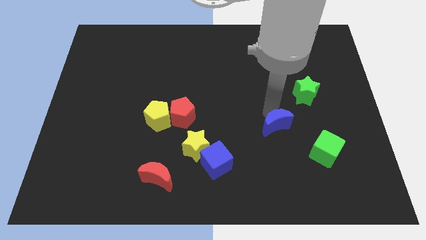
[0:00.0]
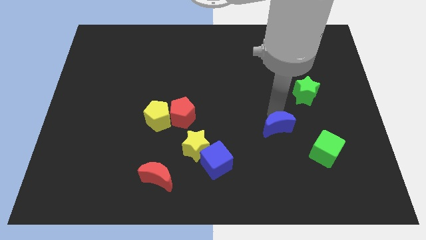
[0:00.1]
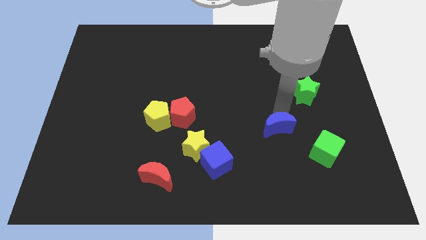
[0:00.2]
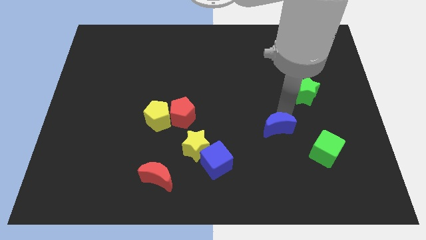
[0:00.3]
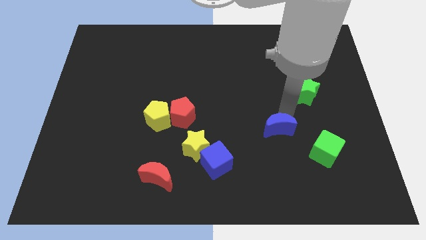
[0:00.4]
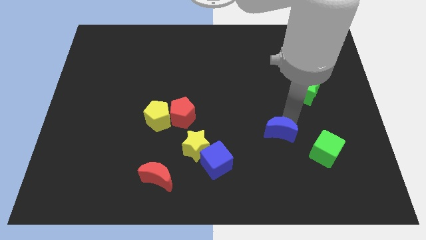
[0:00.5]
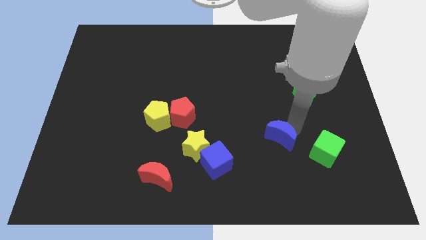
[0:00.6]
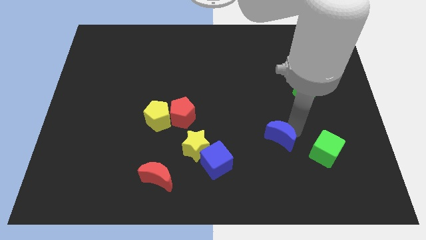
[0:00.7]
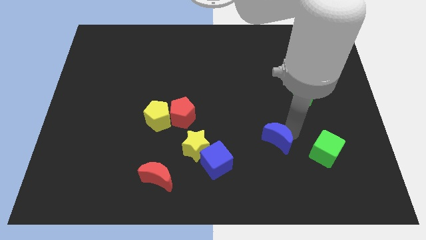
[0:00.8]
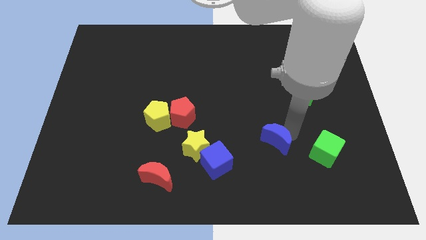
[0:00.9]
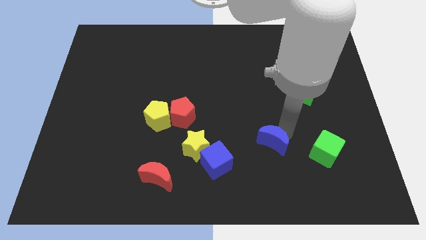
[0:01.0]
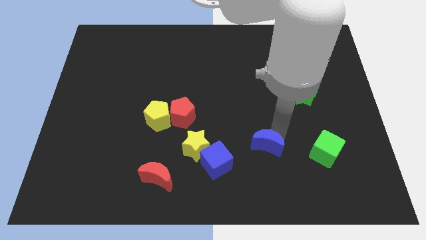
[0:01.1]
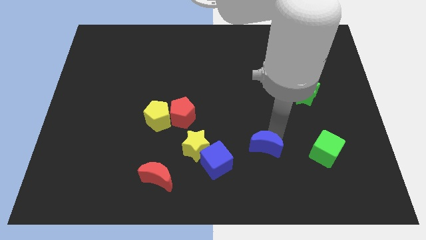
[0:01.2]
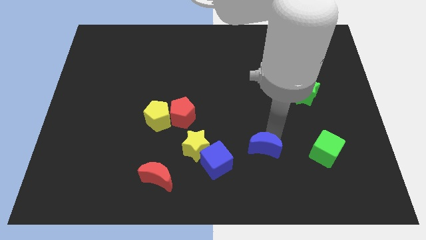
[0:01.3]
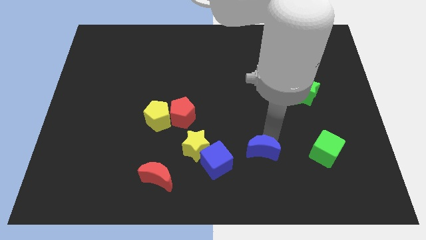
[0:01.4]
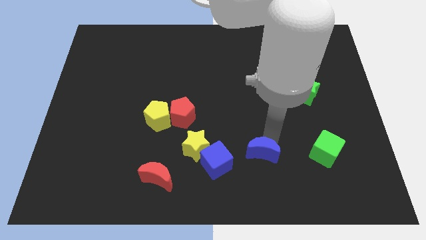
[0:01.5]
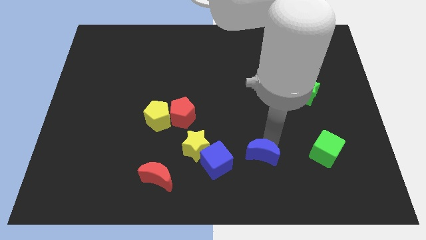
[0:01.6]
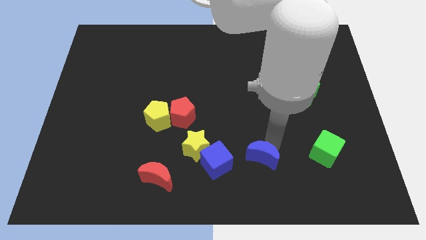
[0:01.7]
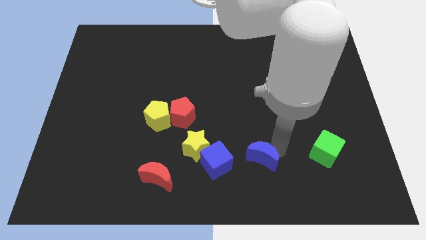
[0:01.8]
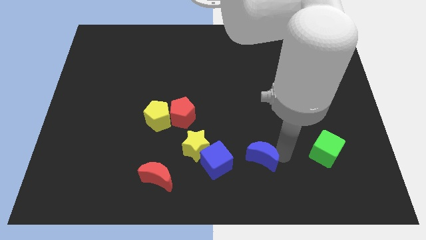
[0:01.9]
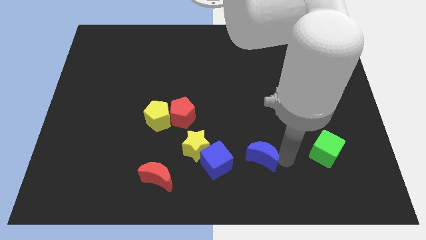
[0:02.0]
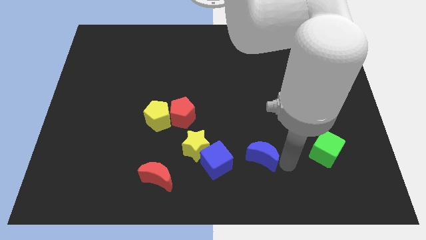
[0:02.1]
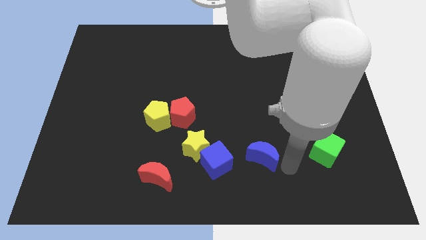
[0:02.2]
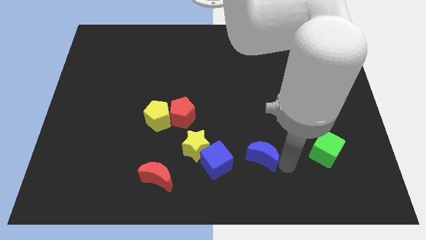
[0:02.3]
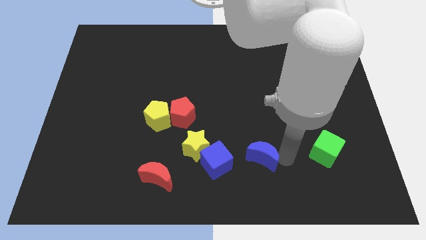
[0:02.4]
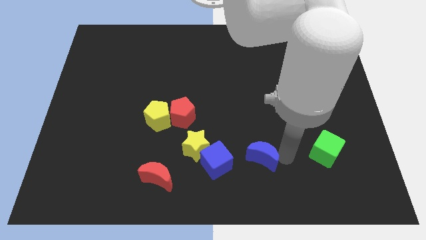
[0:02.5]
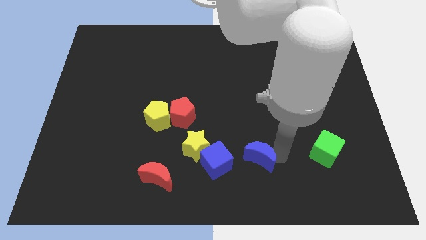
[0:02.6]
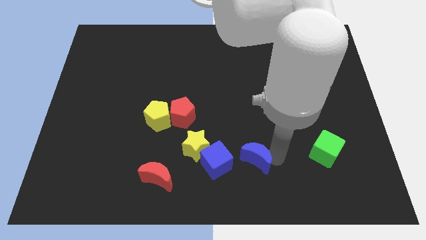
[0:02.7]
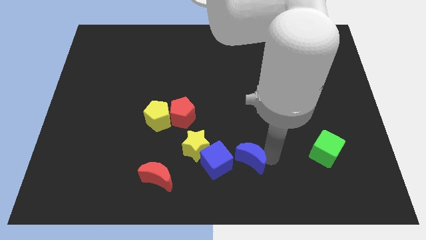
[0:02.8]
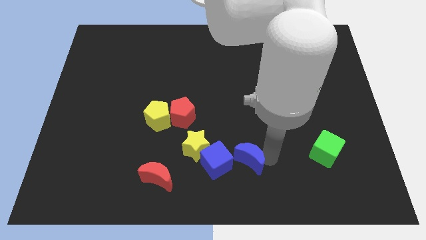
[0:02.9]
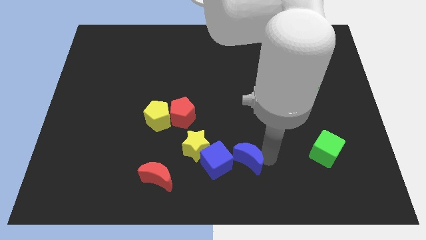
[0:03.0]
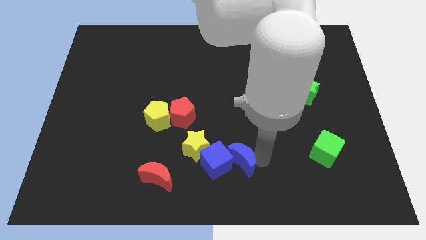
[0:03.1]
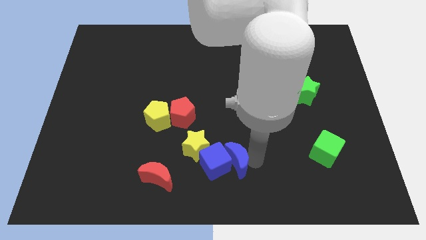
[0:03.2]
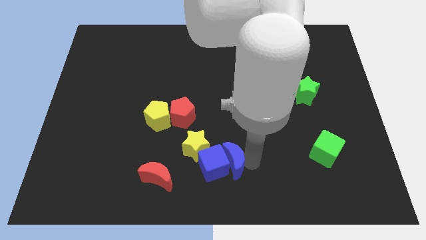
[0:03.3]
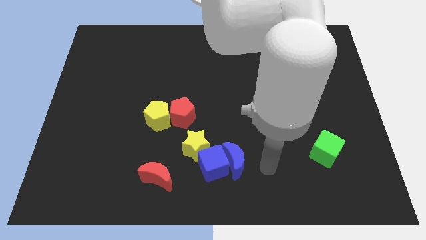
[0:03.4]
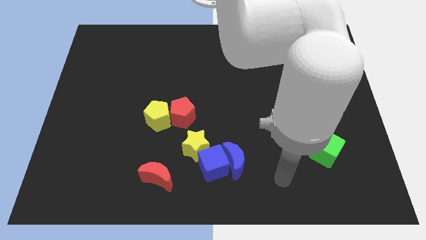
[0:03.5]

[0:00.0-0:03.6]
move the blue crescent into the blue cube

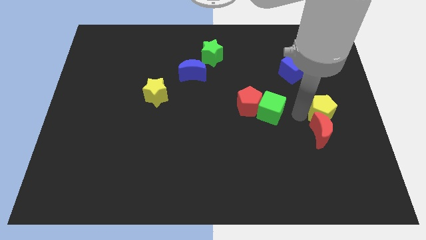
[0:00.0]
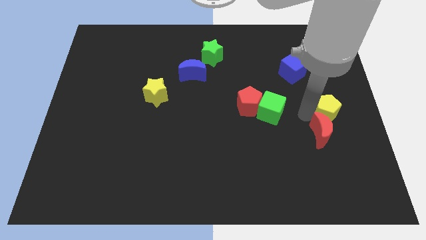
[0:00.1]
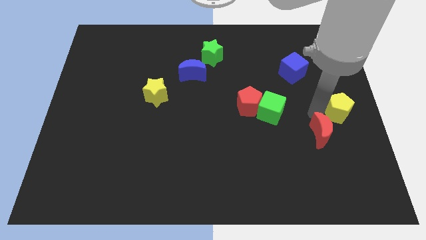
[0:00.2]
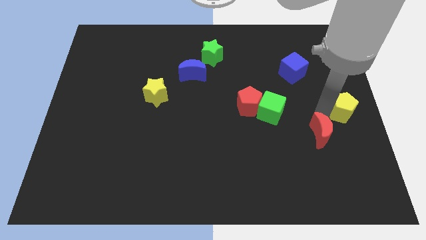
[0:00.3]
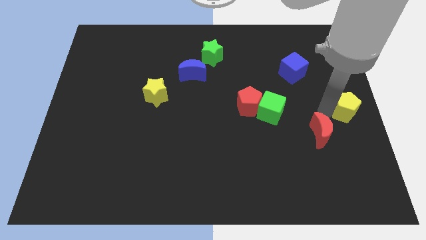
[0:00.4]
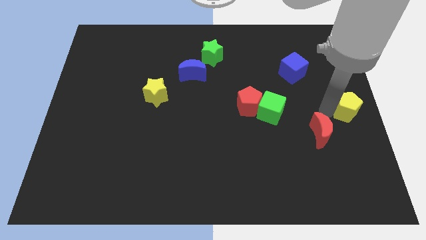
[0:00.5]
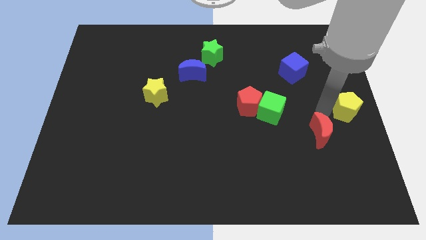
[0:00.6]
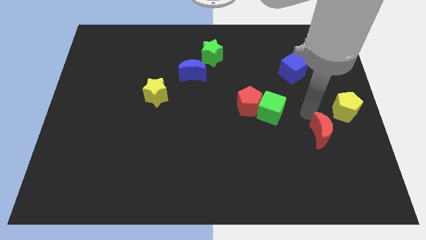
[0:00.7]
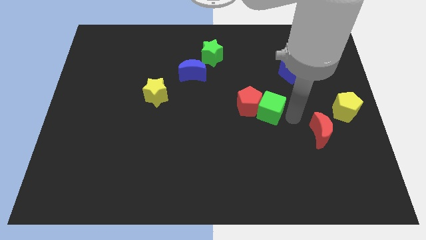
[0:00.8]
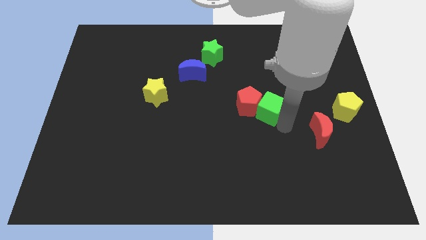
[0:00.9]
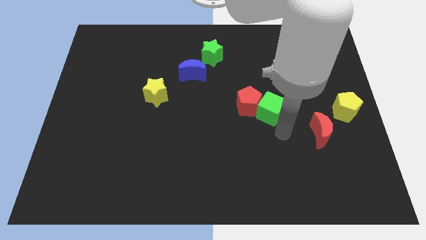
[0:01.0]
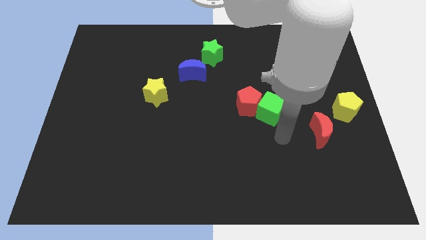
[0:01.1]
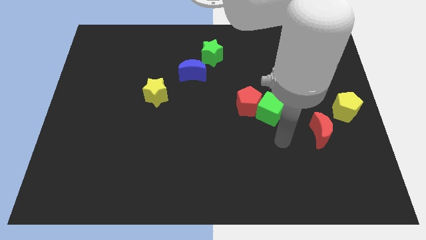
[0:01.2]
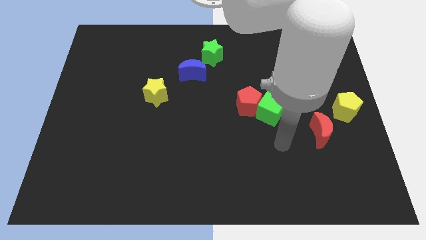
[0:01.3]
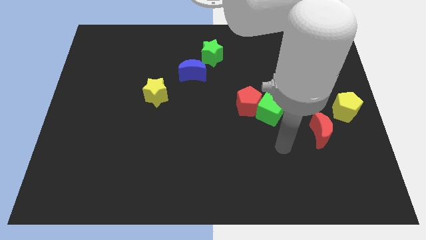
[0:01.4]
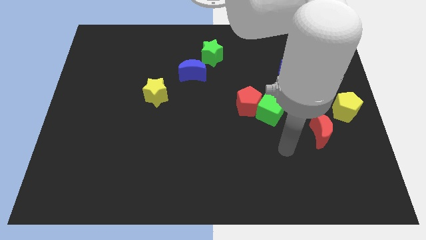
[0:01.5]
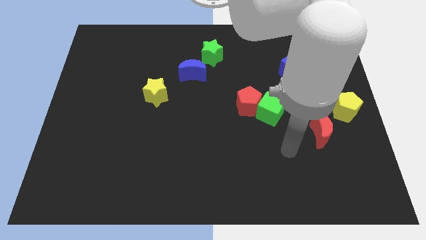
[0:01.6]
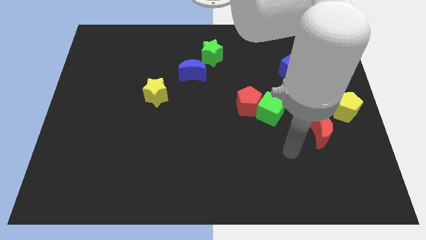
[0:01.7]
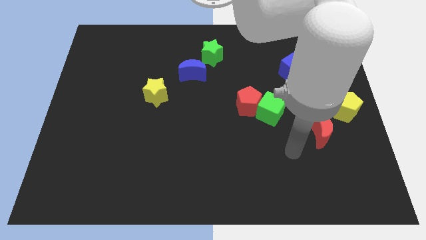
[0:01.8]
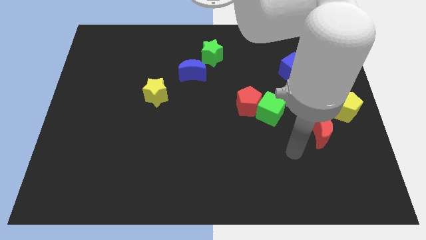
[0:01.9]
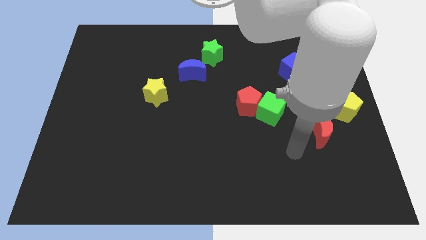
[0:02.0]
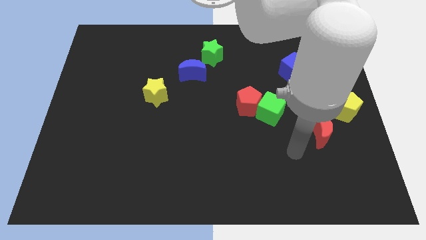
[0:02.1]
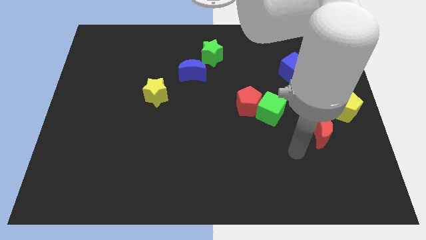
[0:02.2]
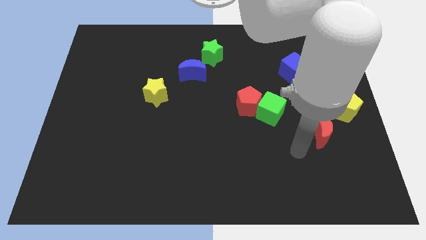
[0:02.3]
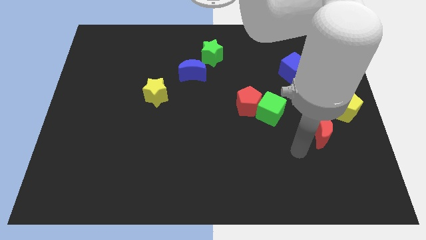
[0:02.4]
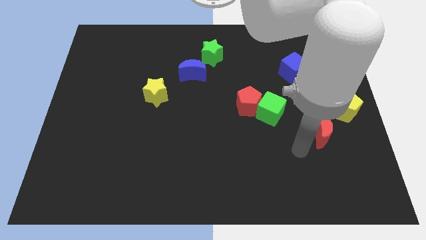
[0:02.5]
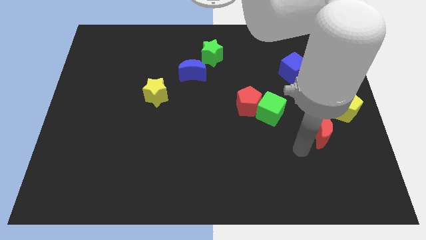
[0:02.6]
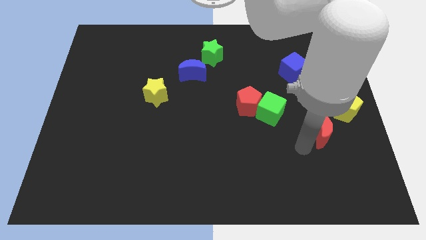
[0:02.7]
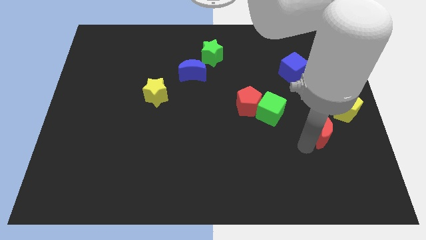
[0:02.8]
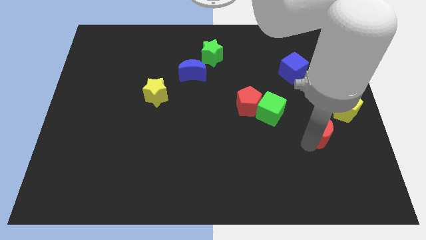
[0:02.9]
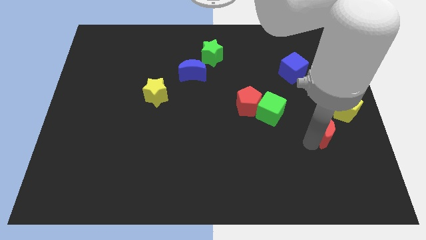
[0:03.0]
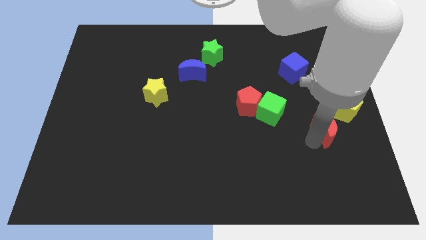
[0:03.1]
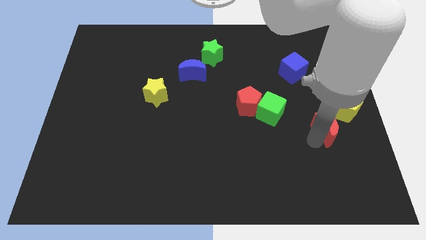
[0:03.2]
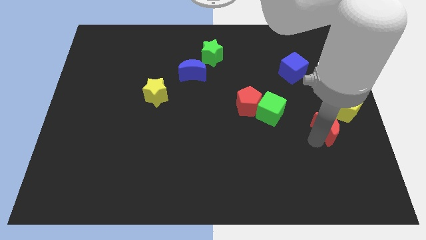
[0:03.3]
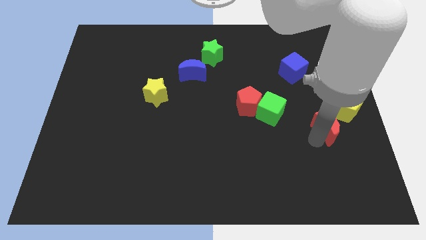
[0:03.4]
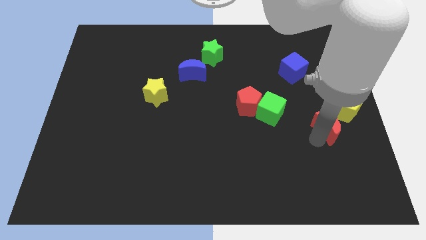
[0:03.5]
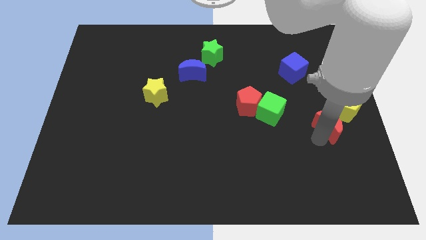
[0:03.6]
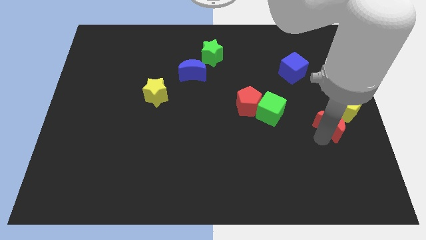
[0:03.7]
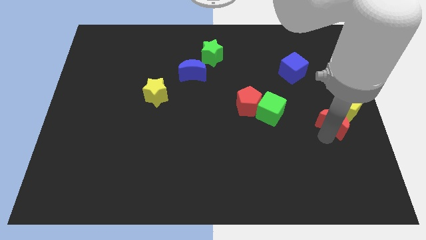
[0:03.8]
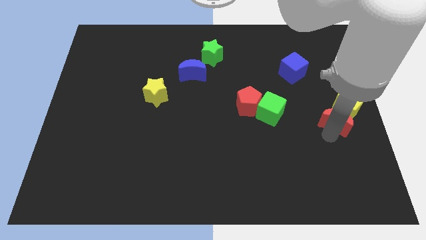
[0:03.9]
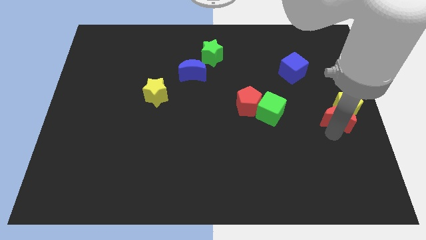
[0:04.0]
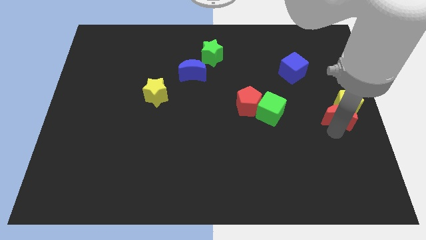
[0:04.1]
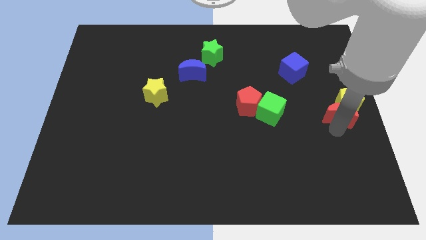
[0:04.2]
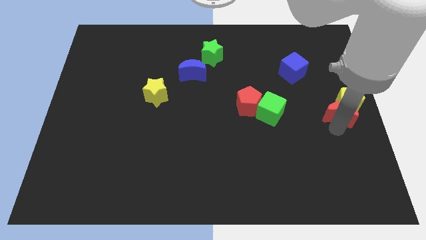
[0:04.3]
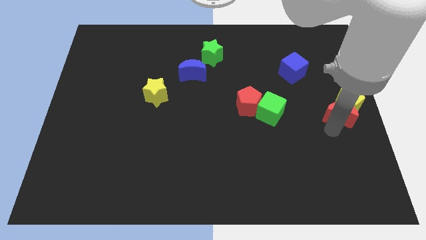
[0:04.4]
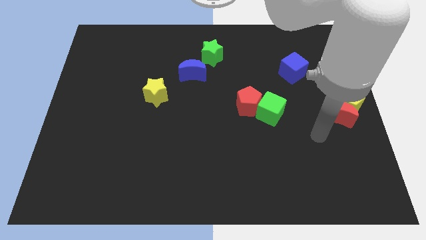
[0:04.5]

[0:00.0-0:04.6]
place the red crescent to the bottom of yellow pentagon

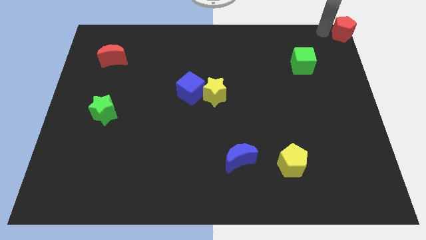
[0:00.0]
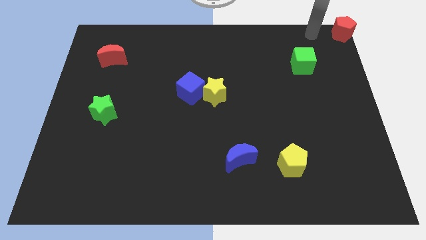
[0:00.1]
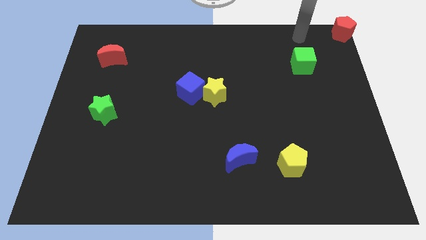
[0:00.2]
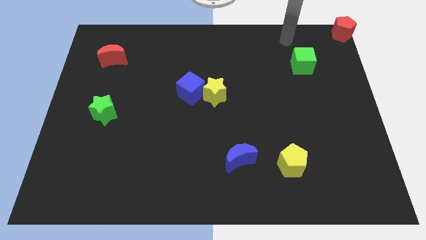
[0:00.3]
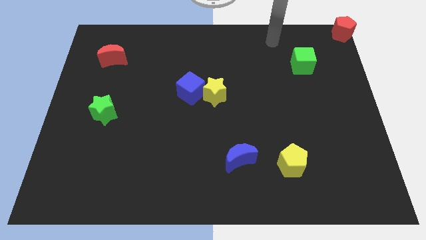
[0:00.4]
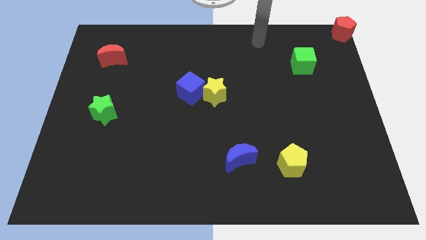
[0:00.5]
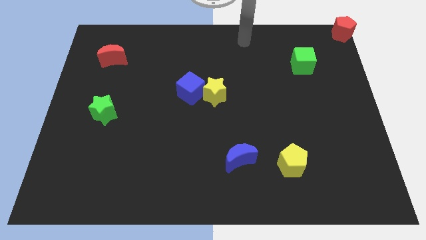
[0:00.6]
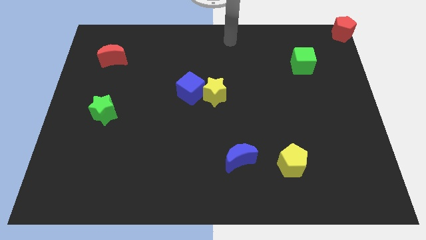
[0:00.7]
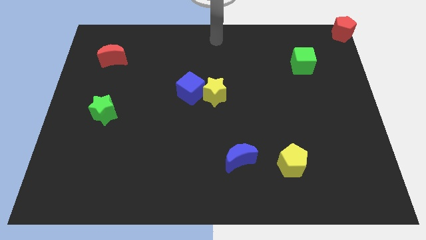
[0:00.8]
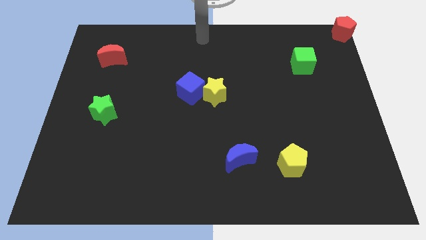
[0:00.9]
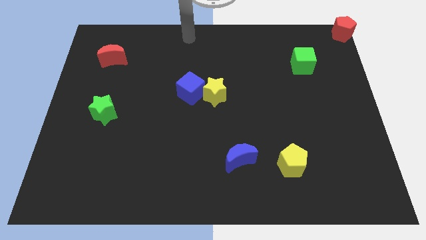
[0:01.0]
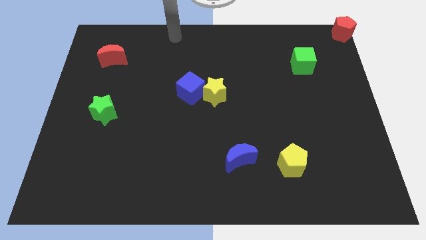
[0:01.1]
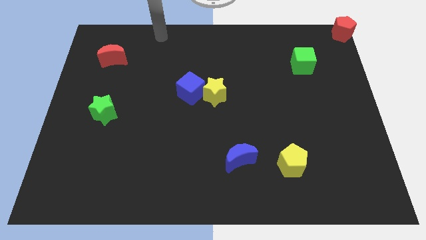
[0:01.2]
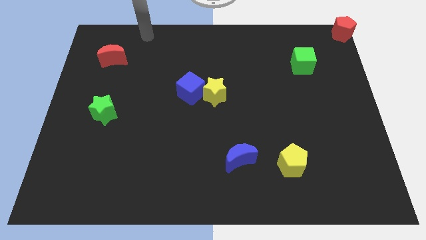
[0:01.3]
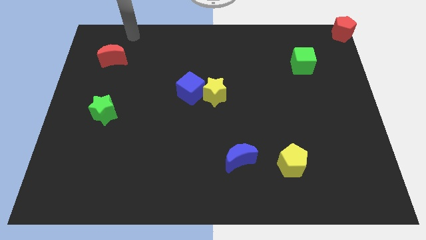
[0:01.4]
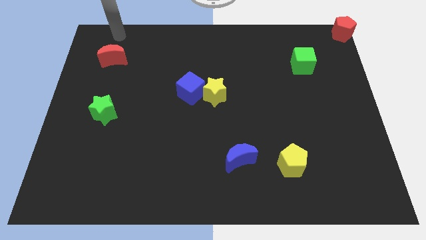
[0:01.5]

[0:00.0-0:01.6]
slide your arm to top side of the red crescent
